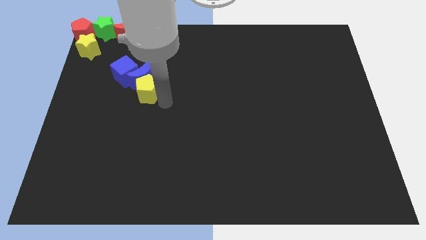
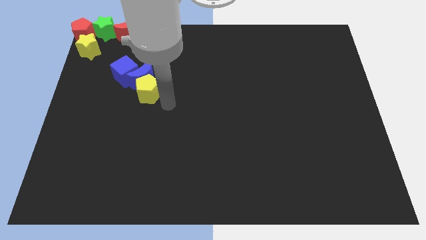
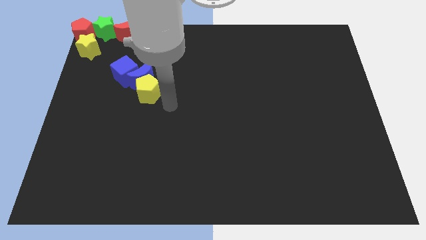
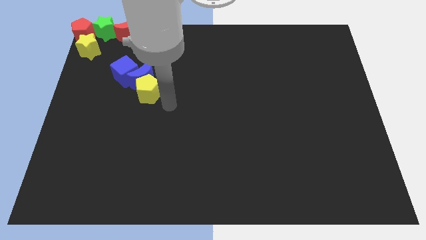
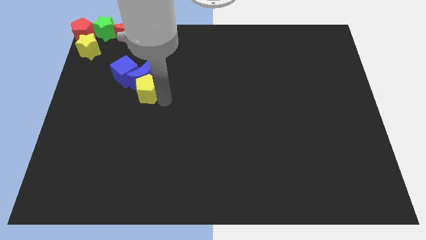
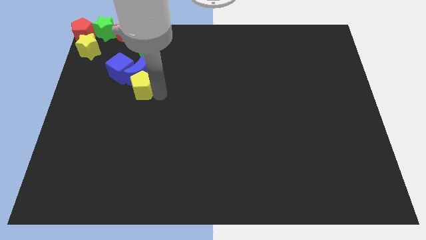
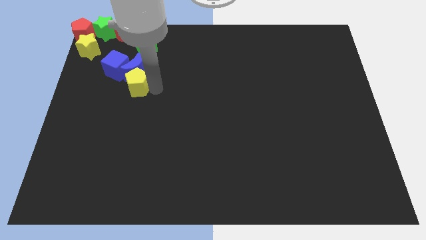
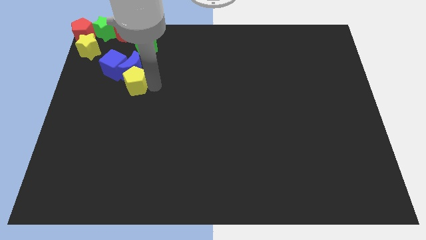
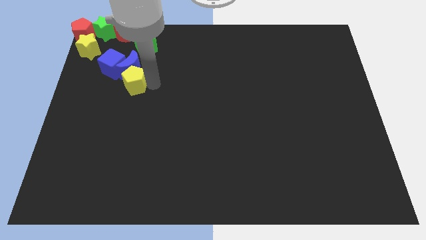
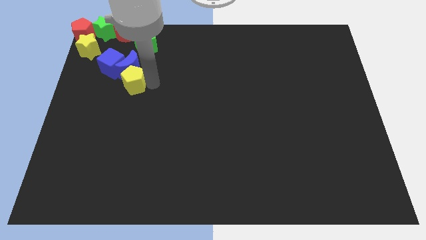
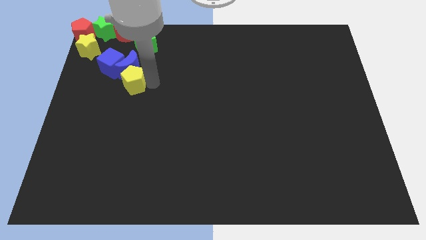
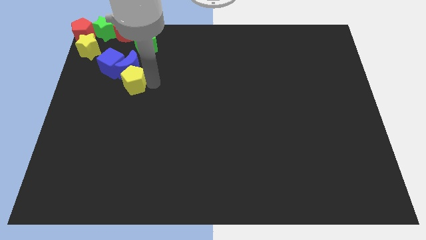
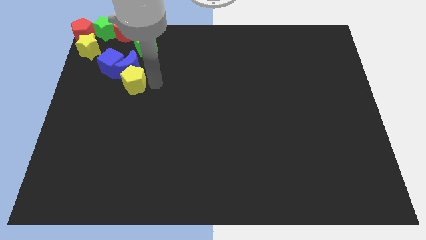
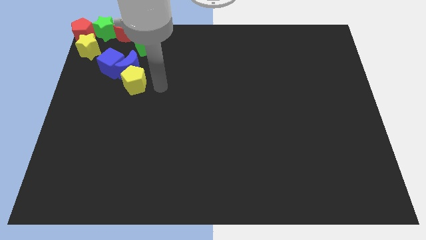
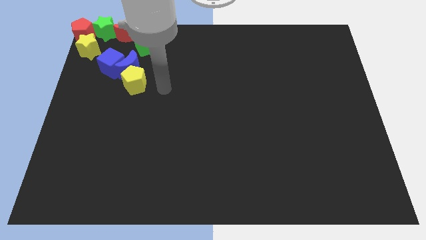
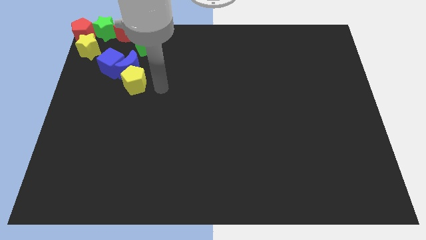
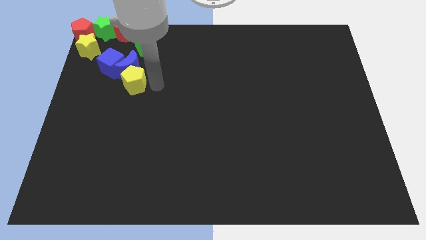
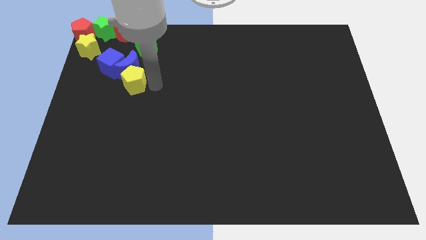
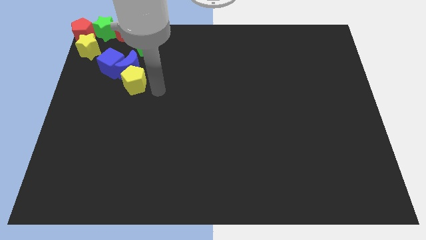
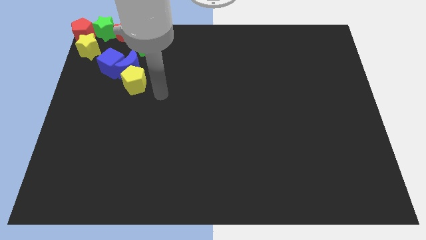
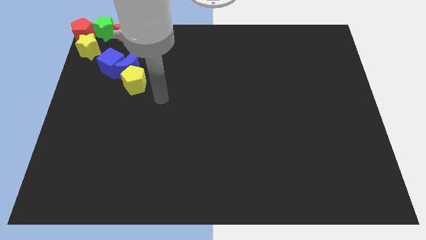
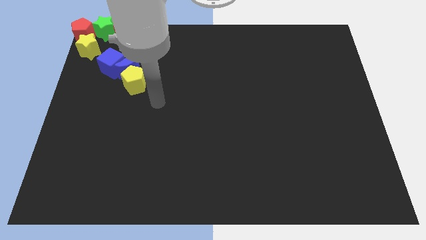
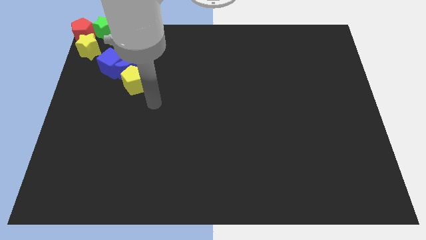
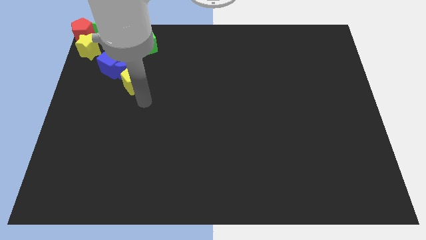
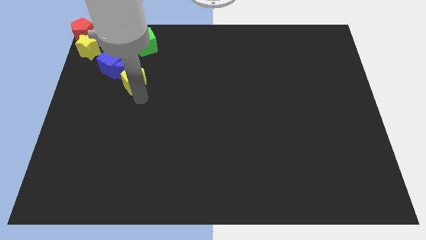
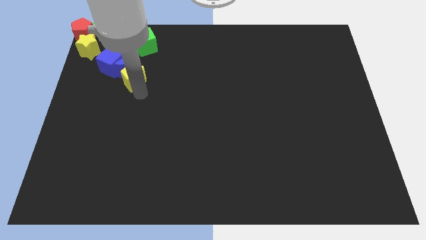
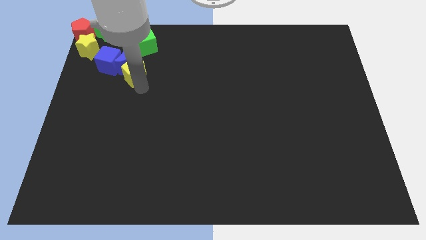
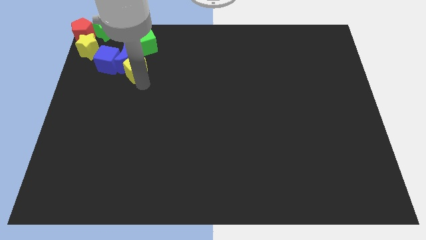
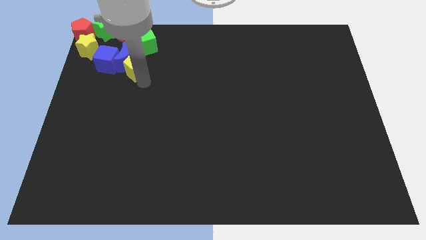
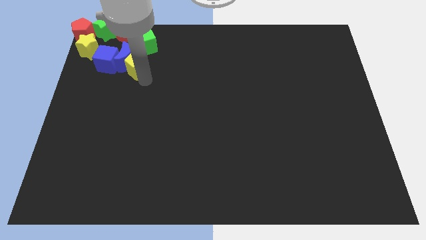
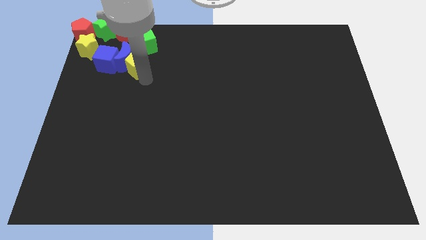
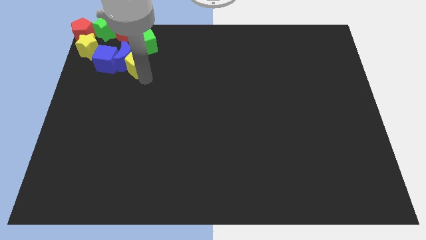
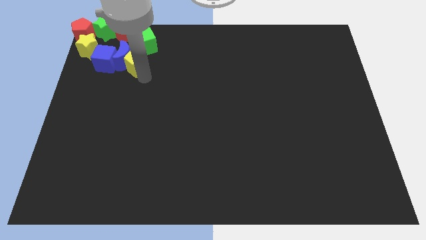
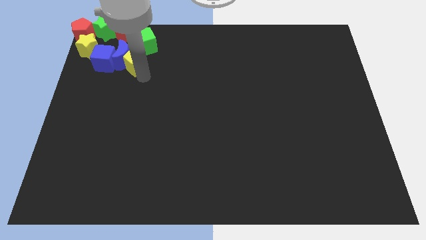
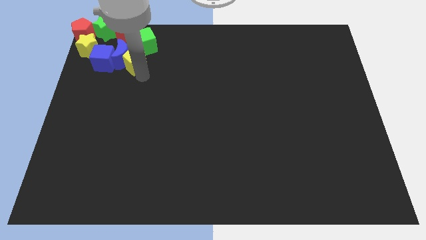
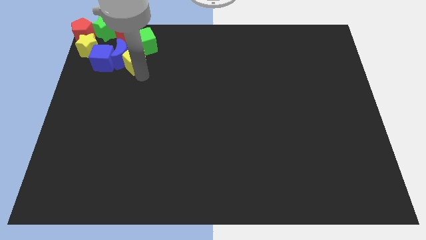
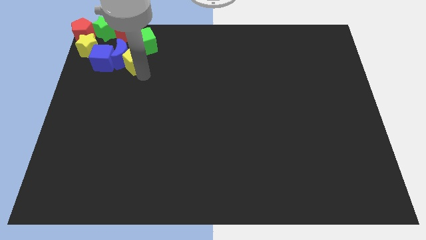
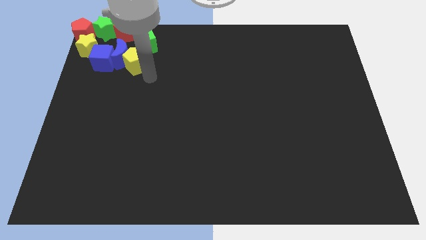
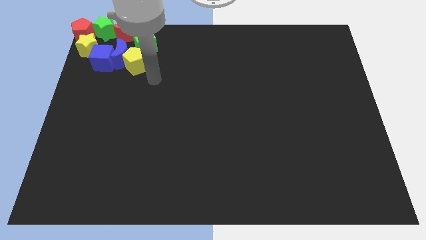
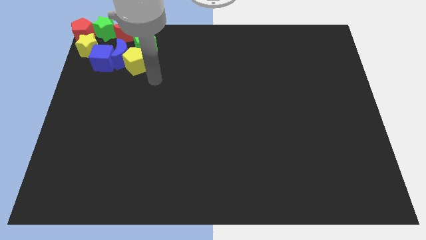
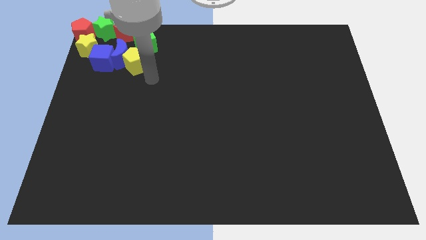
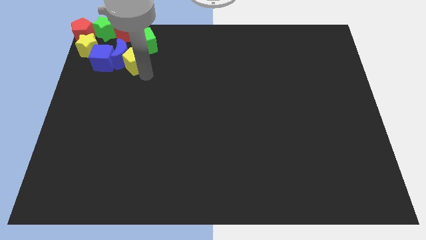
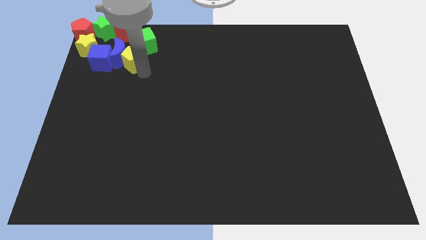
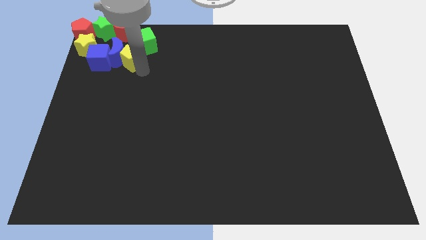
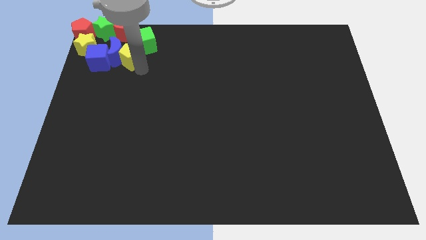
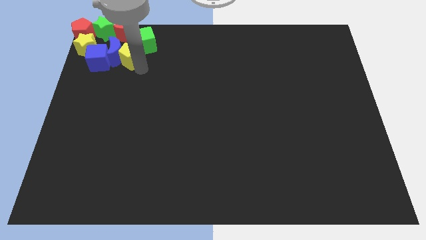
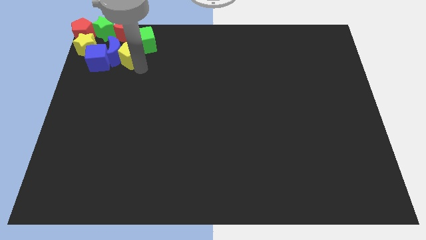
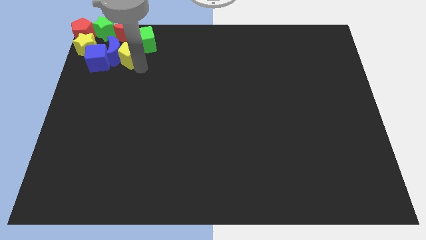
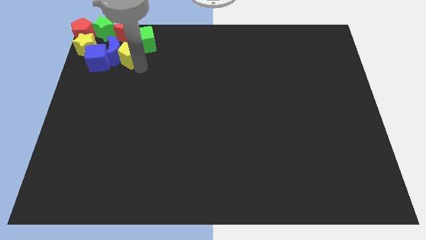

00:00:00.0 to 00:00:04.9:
push blue blocks along with yellow pentagon into group of blocks

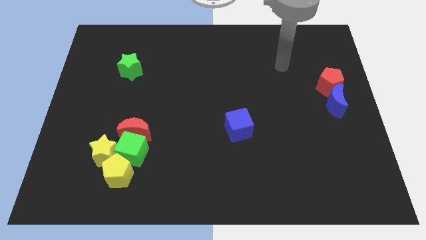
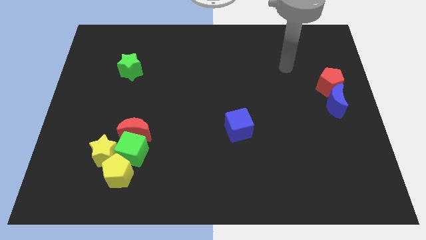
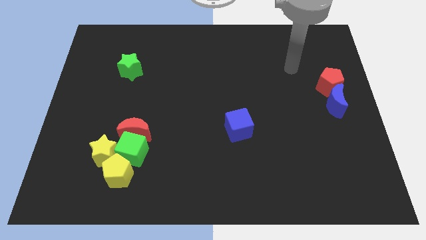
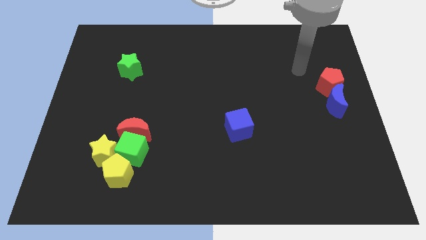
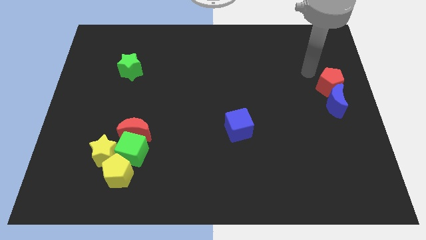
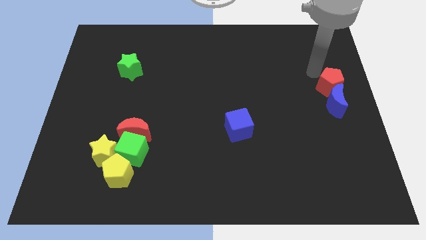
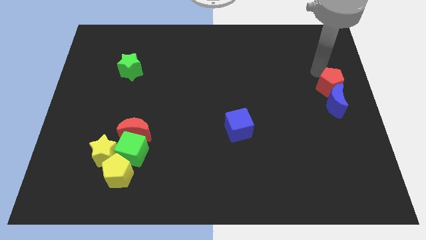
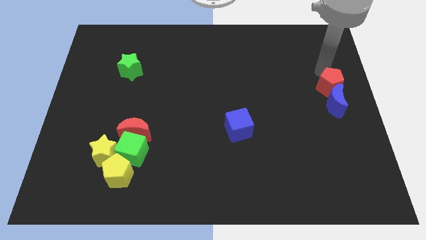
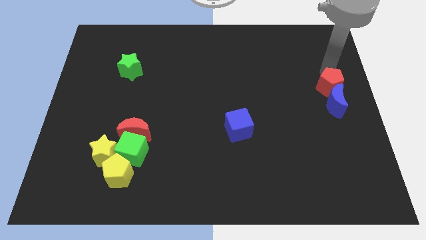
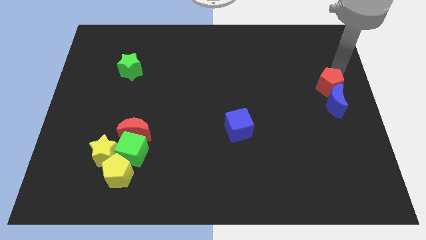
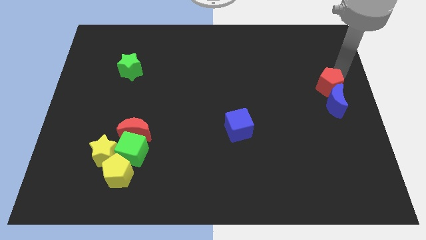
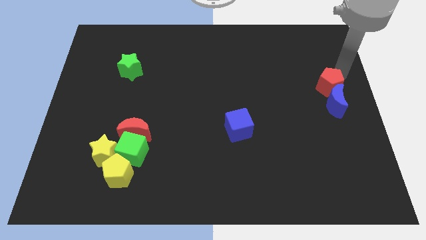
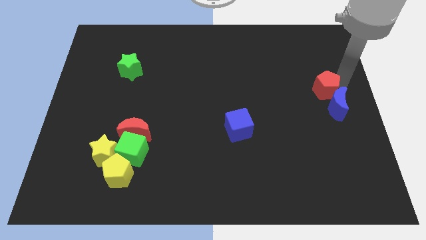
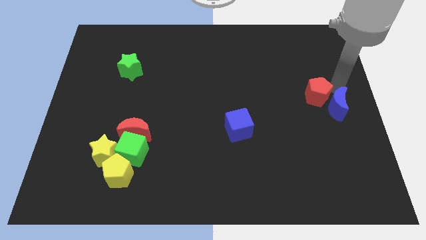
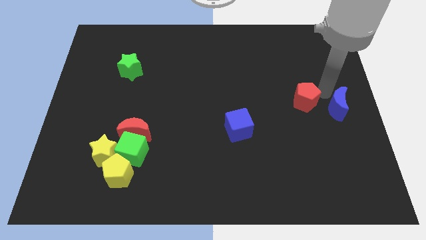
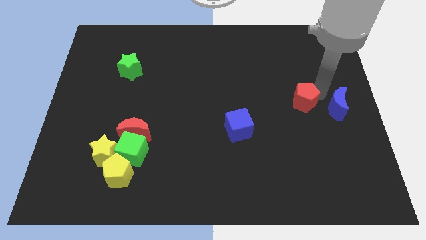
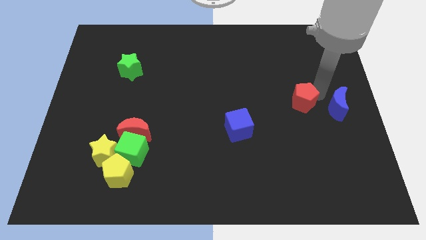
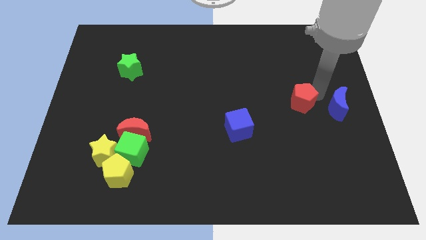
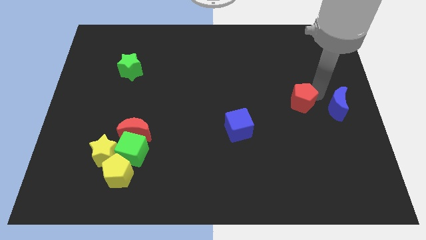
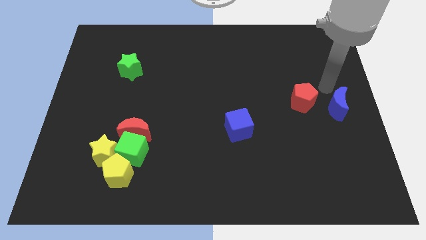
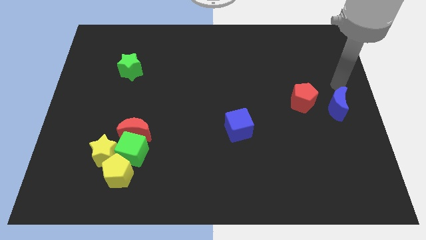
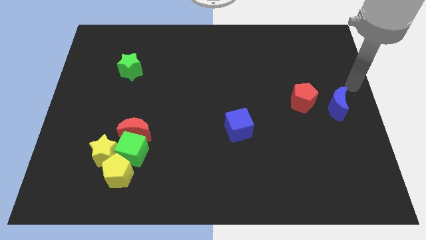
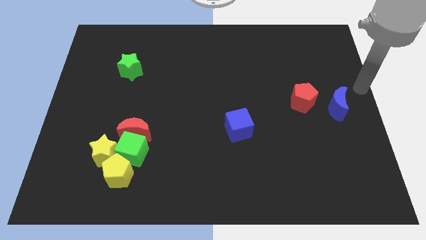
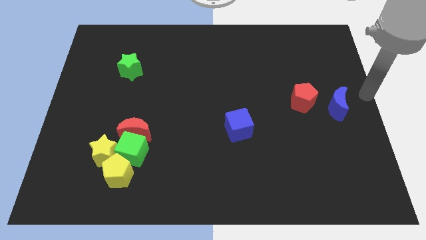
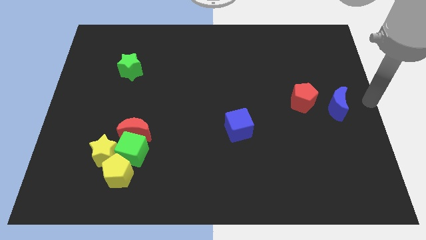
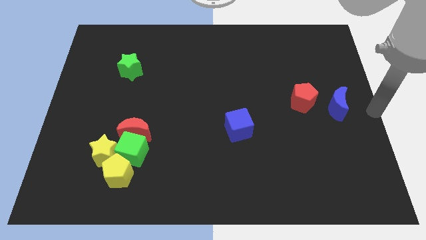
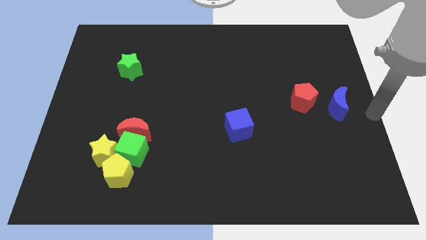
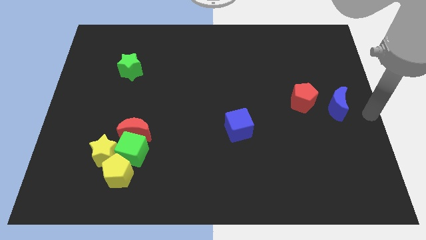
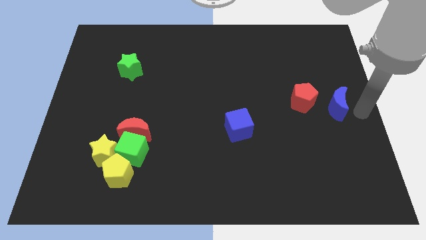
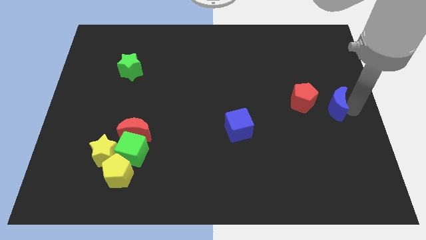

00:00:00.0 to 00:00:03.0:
move the red pentagon left to the blue moon

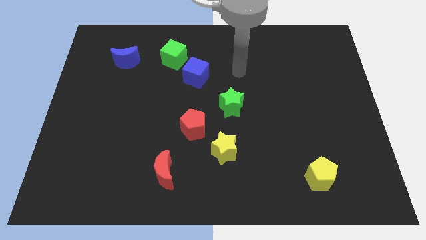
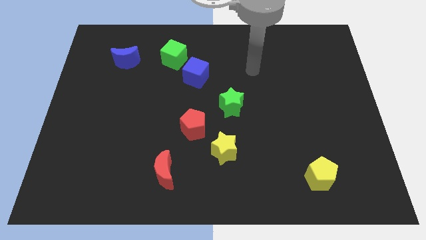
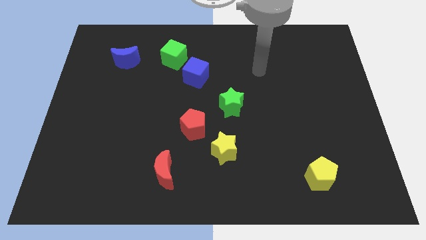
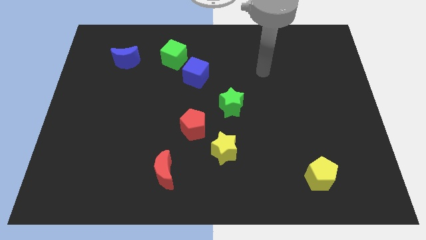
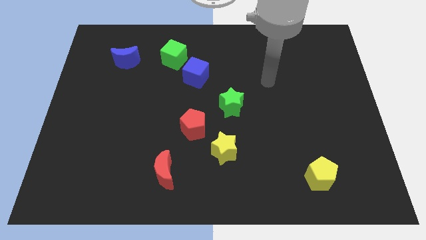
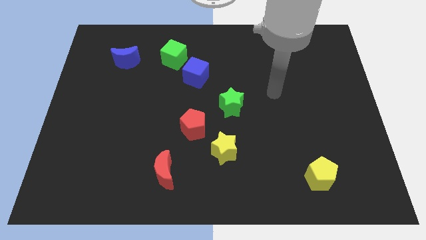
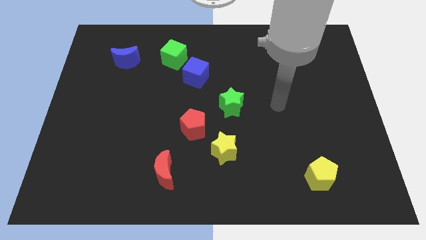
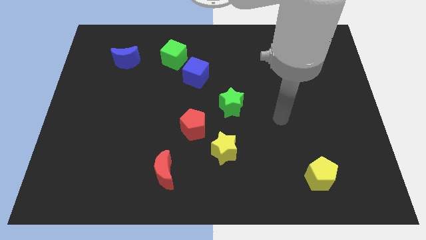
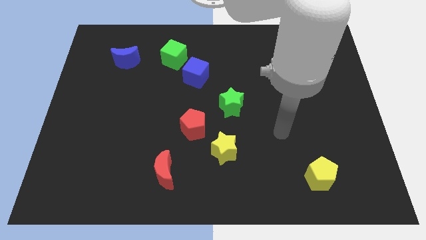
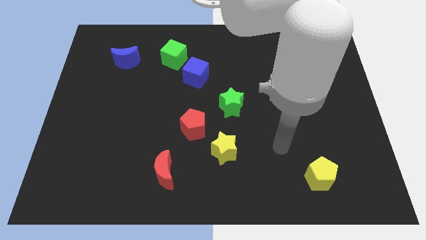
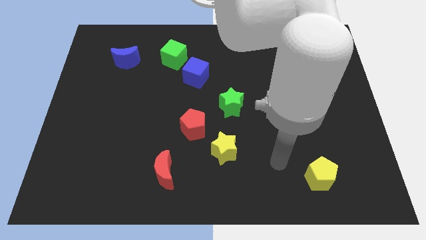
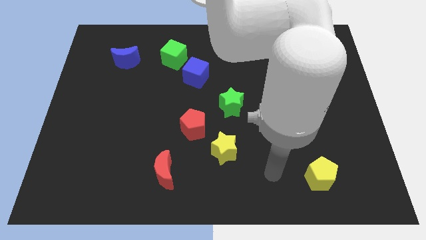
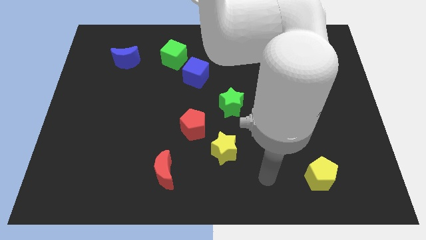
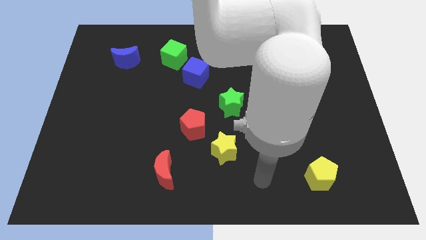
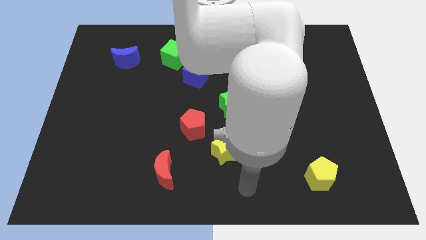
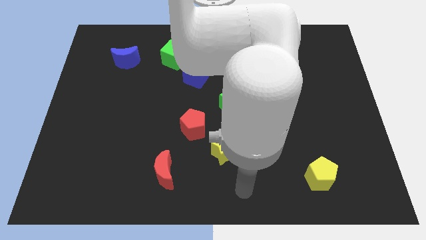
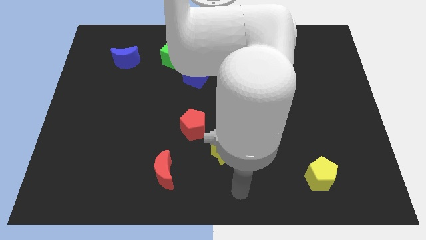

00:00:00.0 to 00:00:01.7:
move your arm to the bottom of the board
